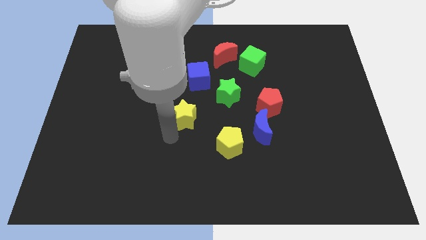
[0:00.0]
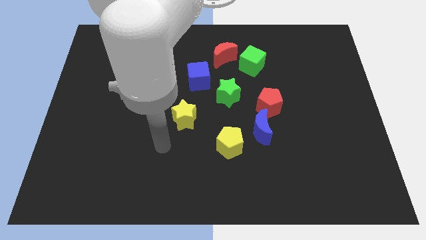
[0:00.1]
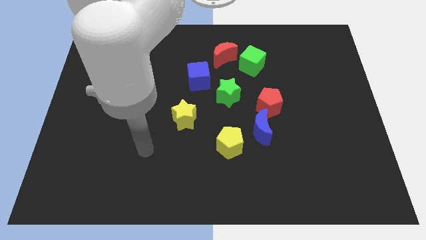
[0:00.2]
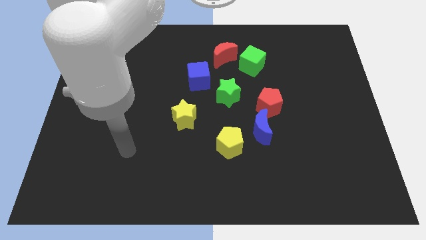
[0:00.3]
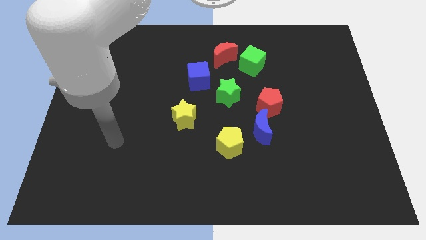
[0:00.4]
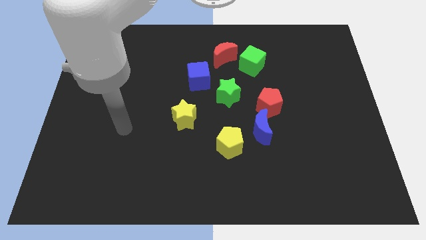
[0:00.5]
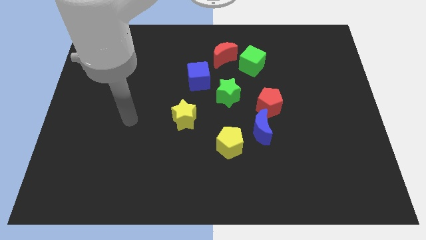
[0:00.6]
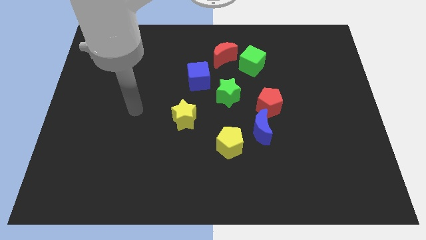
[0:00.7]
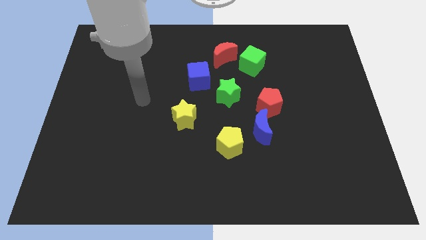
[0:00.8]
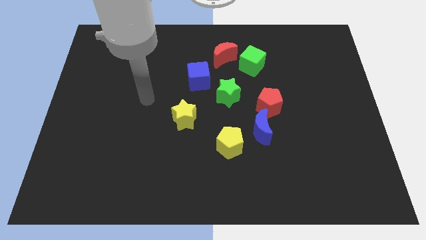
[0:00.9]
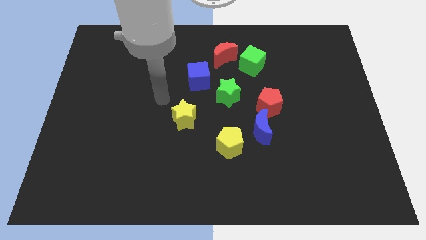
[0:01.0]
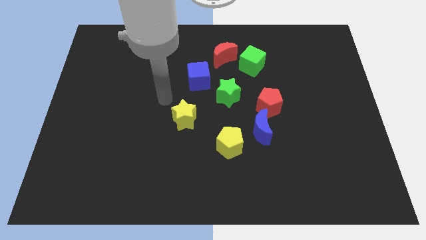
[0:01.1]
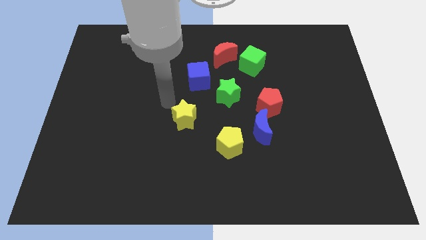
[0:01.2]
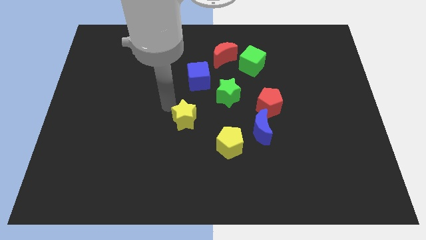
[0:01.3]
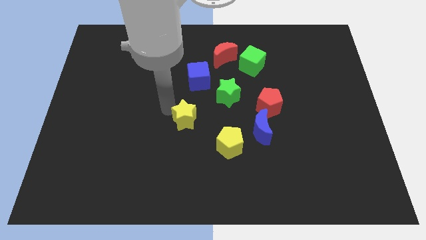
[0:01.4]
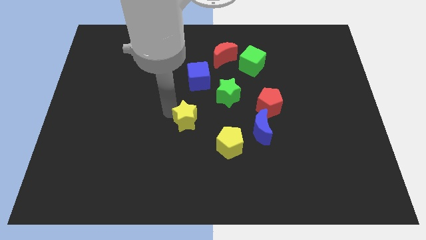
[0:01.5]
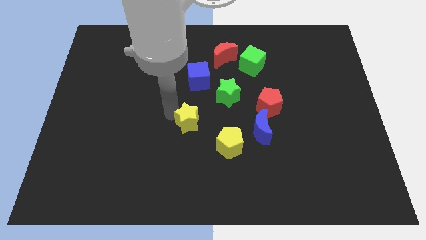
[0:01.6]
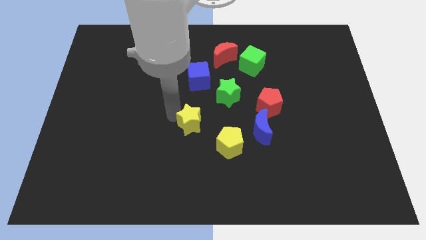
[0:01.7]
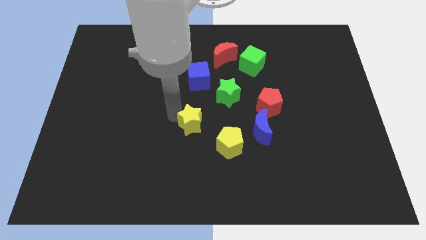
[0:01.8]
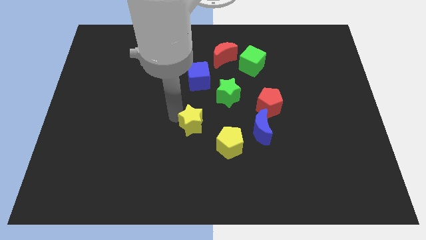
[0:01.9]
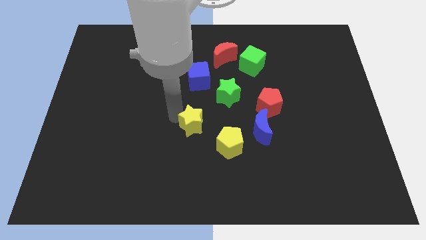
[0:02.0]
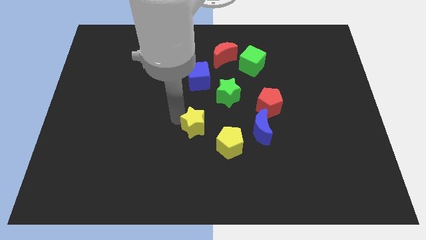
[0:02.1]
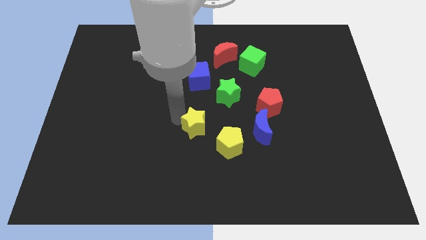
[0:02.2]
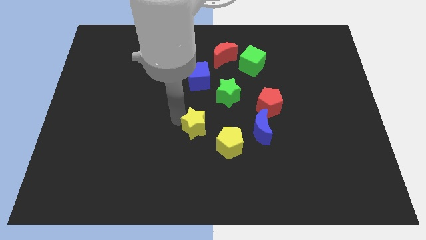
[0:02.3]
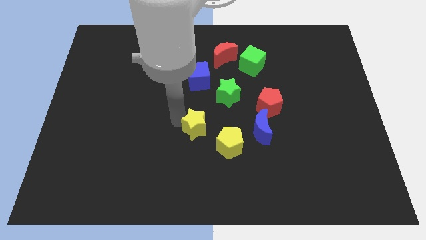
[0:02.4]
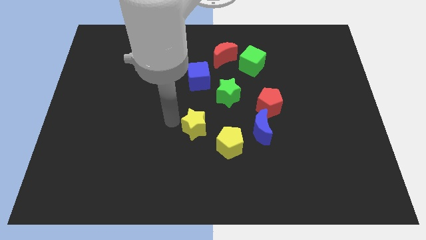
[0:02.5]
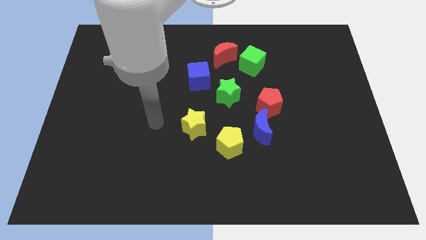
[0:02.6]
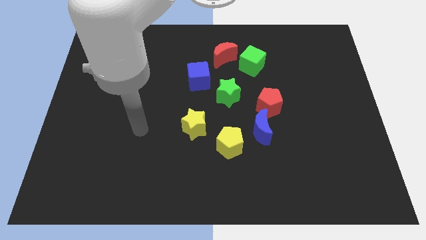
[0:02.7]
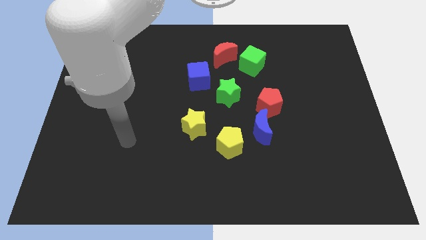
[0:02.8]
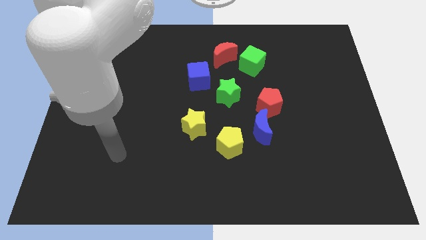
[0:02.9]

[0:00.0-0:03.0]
place the yellow star to the top left of yellow pentagon

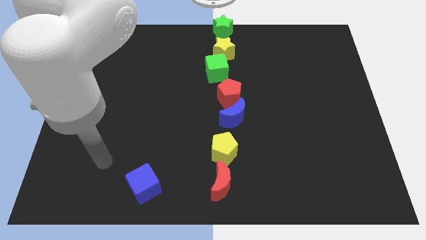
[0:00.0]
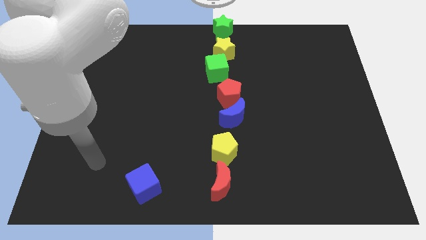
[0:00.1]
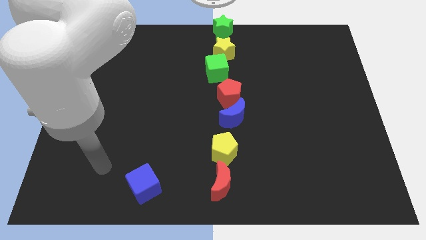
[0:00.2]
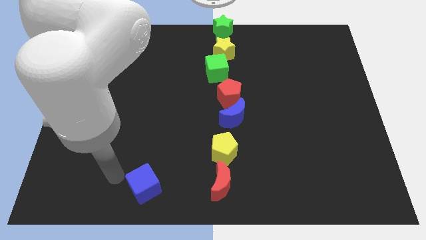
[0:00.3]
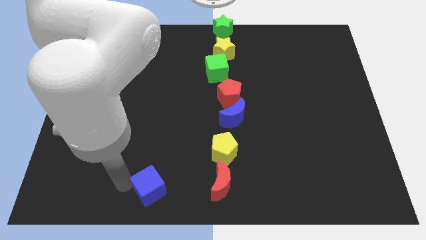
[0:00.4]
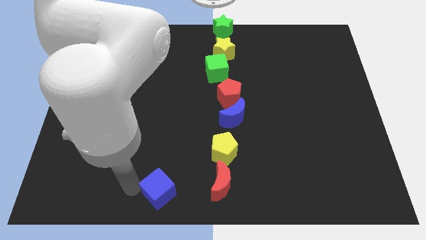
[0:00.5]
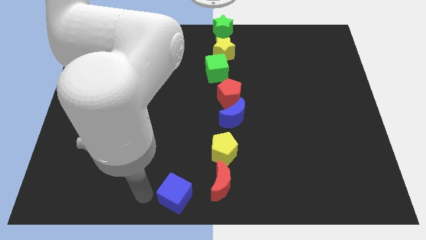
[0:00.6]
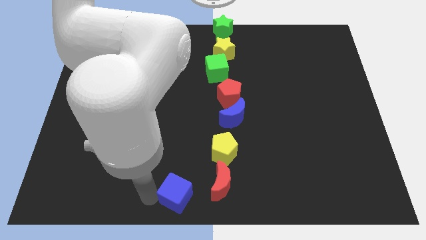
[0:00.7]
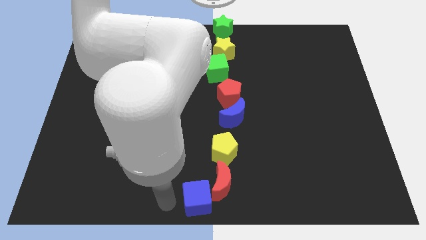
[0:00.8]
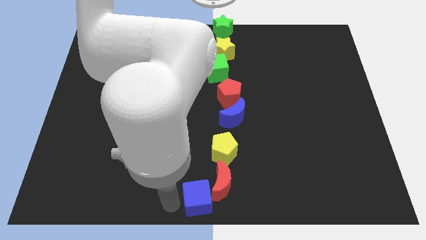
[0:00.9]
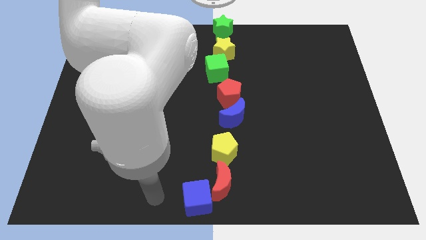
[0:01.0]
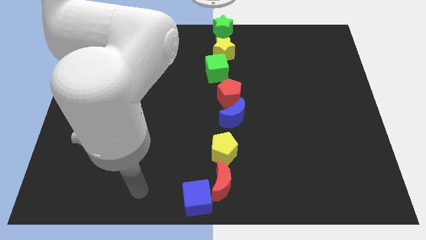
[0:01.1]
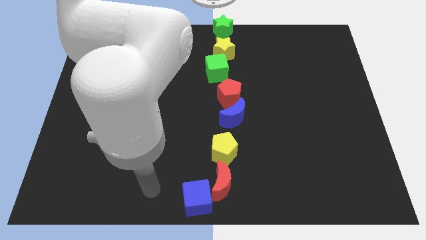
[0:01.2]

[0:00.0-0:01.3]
move the blue cube into the red moon

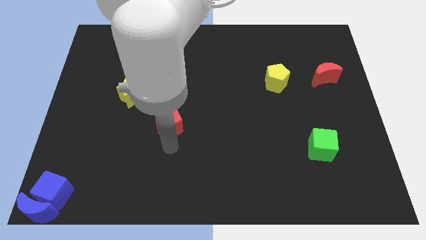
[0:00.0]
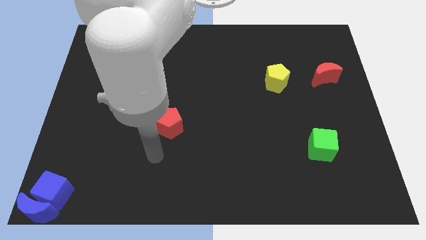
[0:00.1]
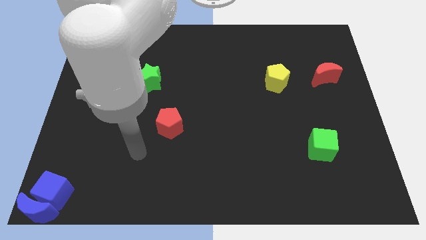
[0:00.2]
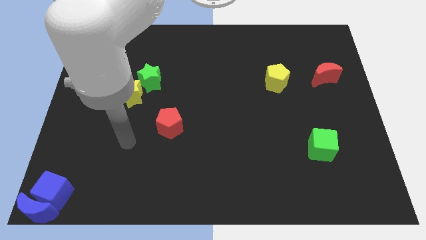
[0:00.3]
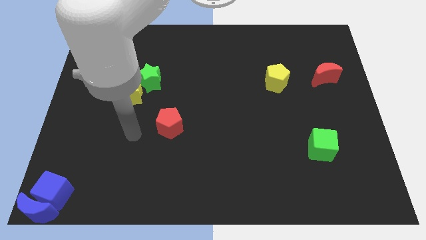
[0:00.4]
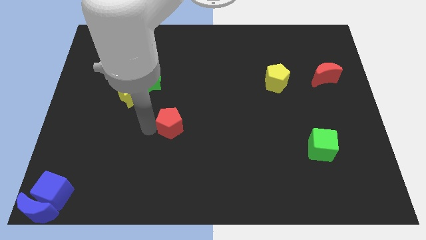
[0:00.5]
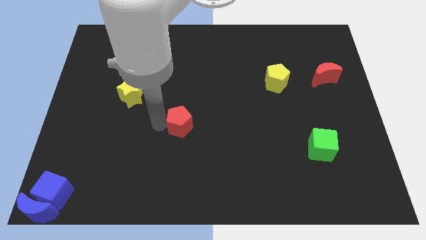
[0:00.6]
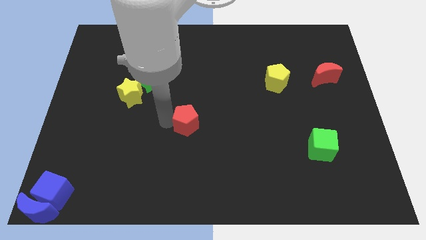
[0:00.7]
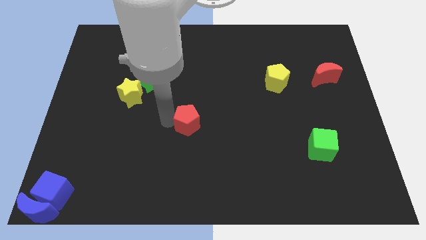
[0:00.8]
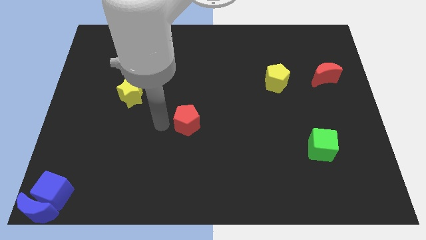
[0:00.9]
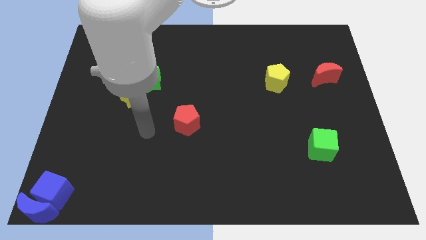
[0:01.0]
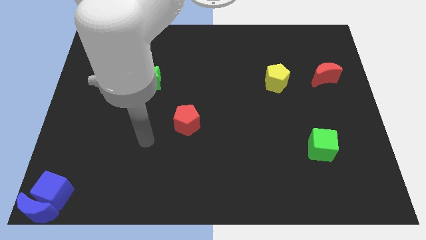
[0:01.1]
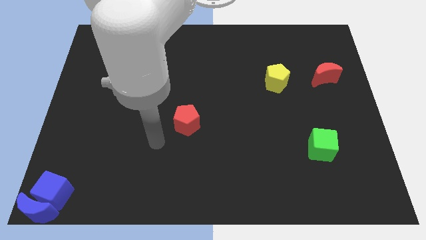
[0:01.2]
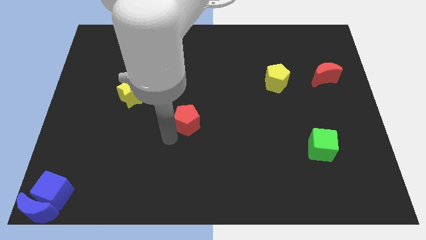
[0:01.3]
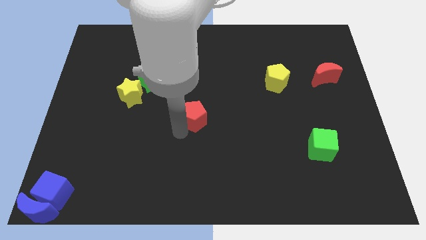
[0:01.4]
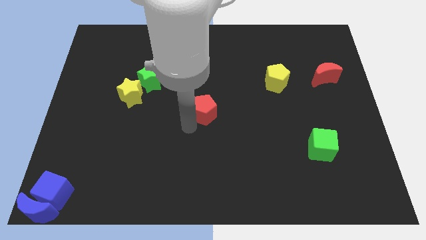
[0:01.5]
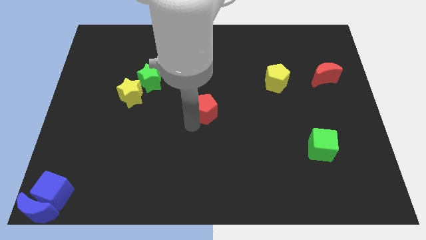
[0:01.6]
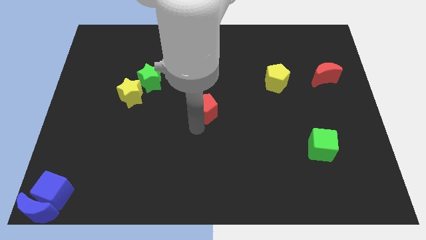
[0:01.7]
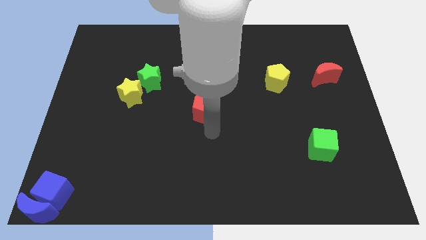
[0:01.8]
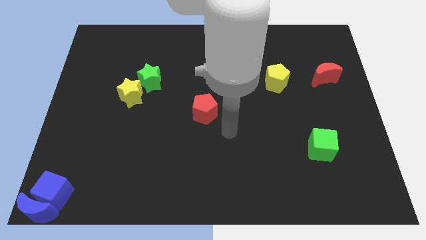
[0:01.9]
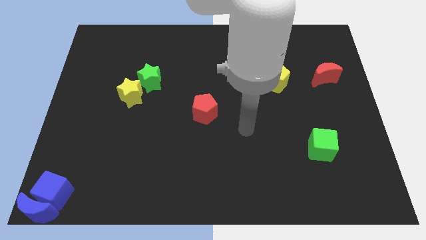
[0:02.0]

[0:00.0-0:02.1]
push red pentagon to the center

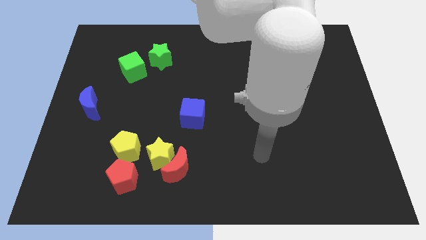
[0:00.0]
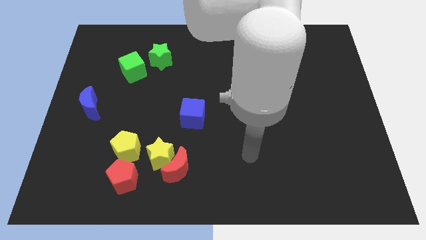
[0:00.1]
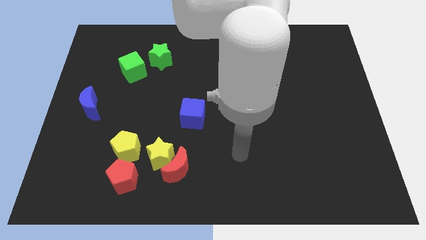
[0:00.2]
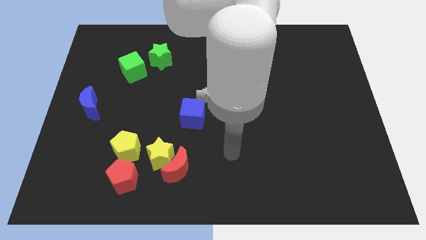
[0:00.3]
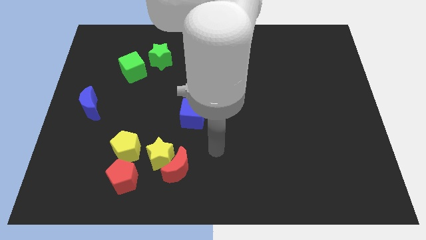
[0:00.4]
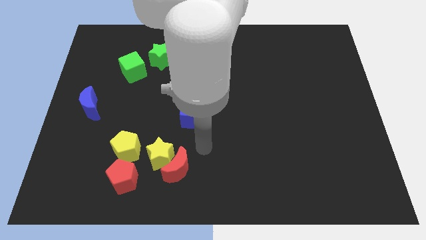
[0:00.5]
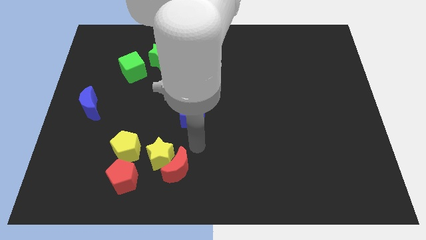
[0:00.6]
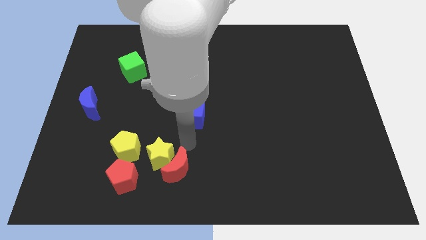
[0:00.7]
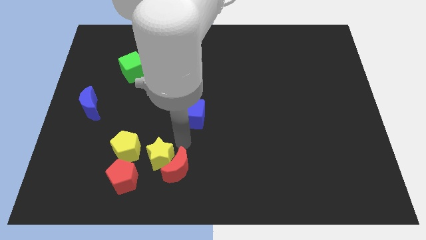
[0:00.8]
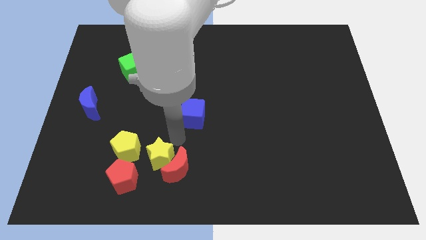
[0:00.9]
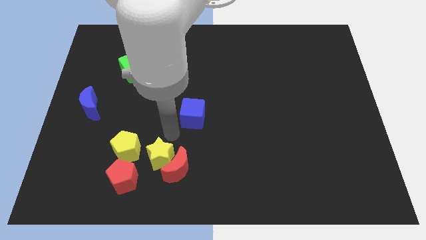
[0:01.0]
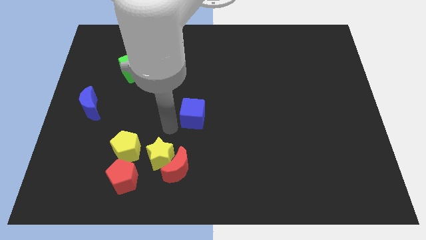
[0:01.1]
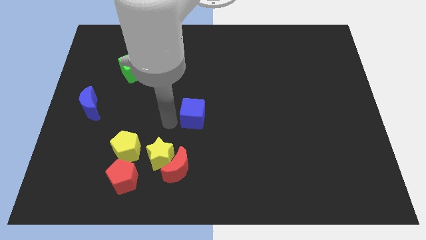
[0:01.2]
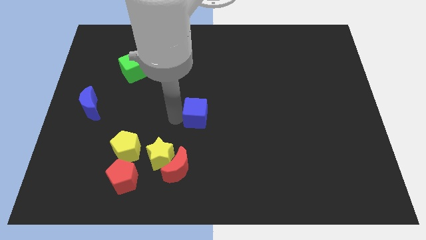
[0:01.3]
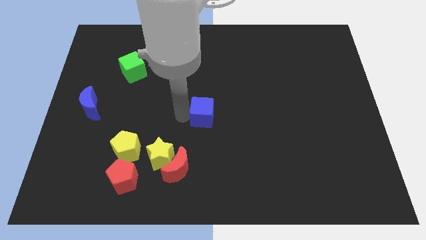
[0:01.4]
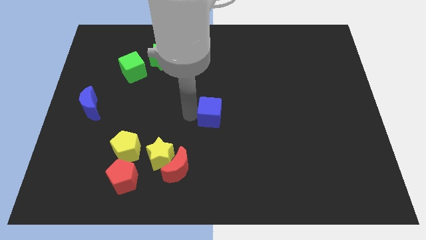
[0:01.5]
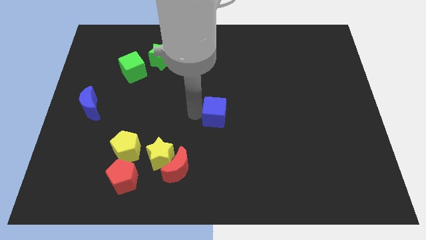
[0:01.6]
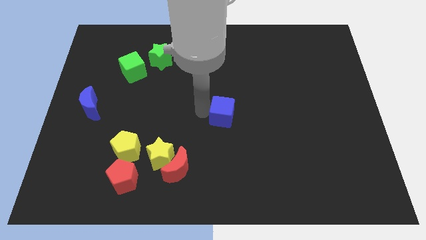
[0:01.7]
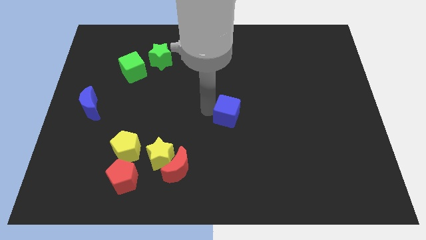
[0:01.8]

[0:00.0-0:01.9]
push the blue cube towards the right side of the board

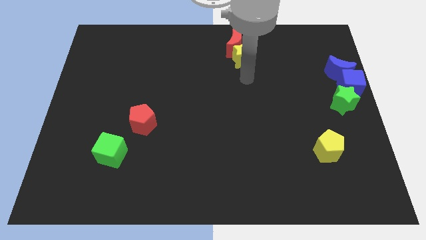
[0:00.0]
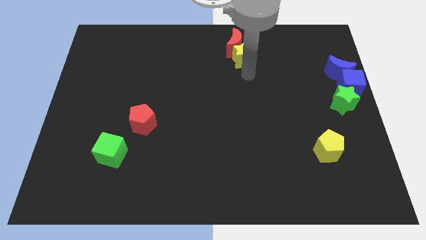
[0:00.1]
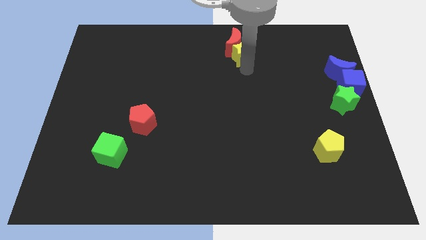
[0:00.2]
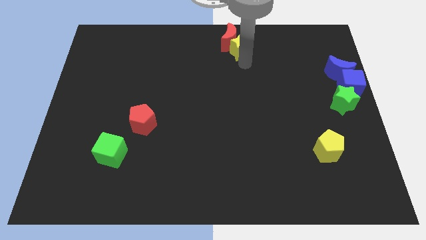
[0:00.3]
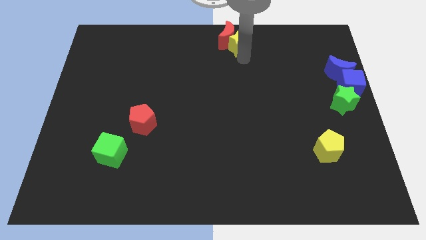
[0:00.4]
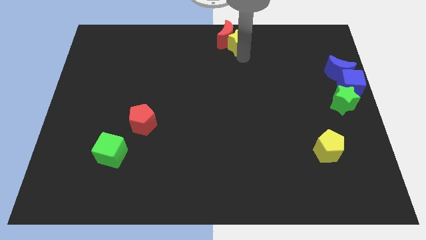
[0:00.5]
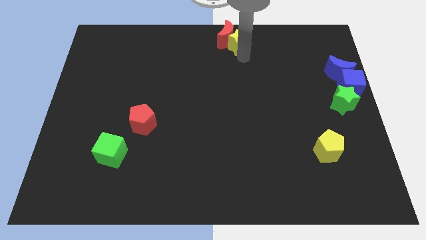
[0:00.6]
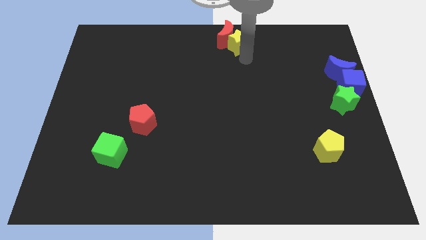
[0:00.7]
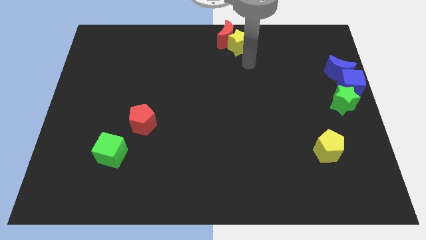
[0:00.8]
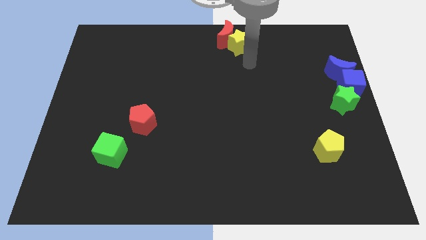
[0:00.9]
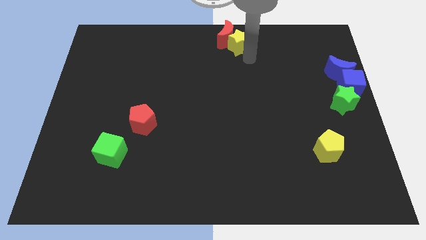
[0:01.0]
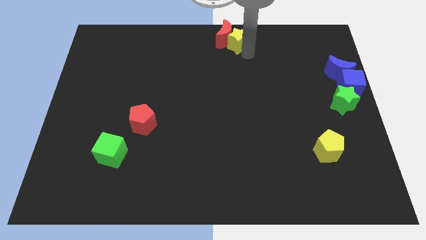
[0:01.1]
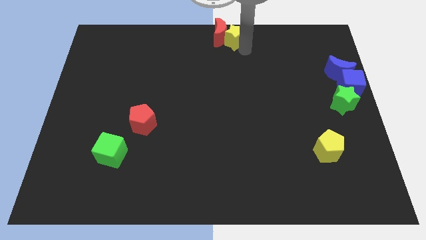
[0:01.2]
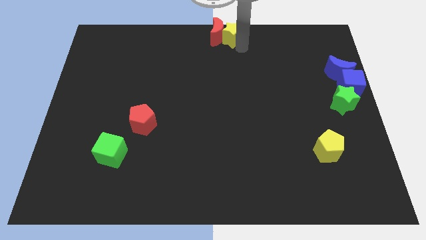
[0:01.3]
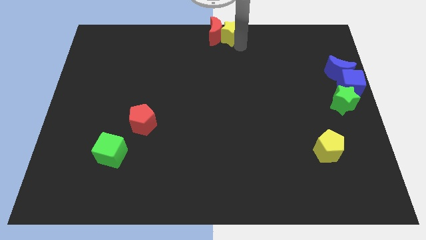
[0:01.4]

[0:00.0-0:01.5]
put the red moon and yellow star at the top center of the board
